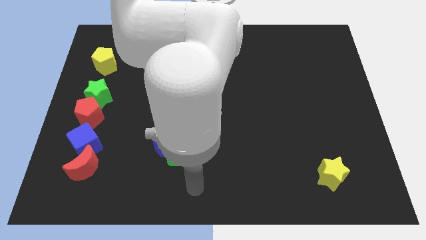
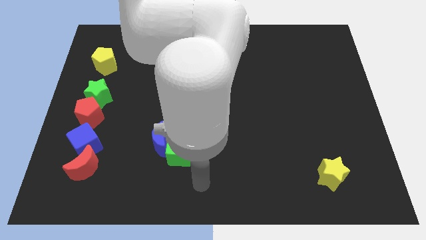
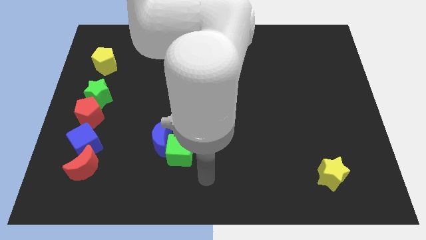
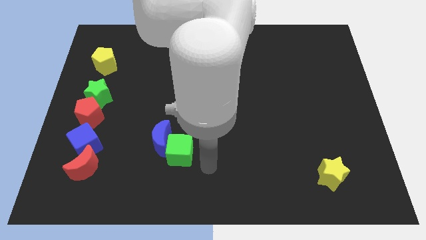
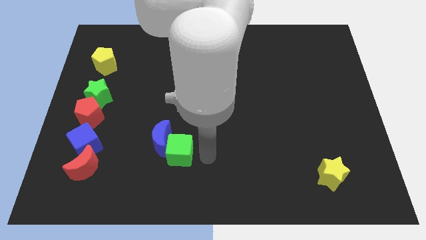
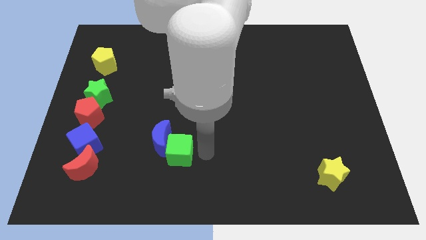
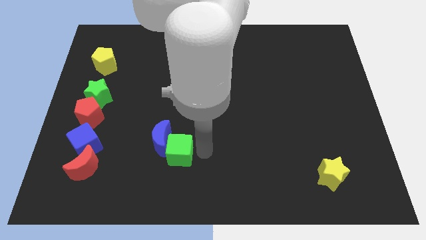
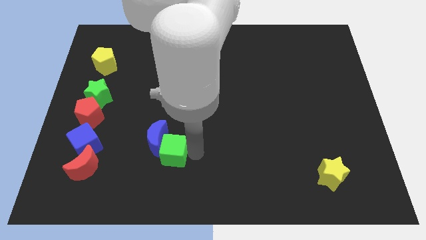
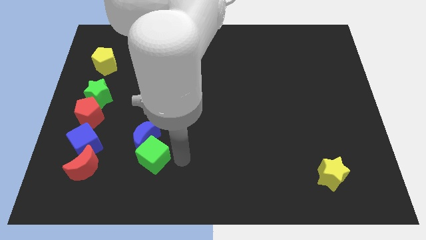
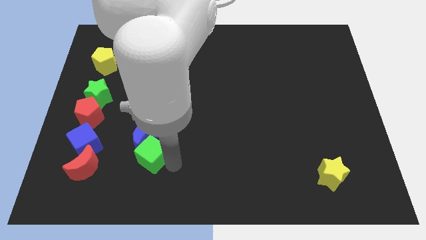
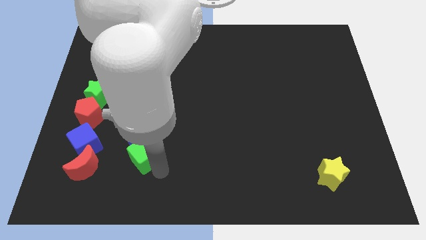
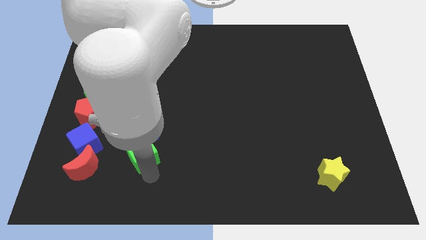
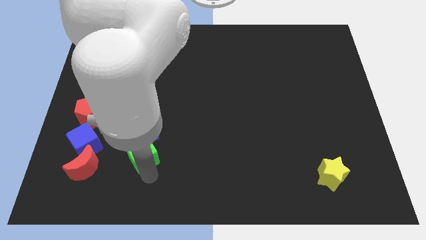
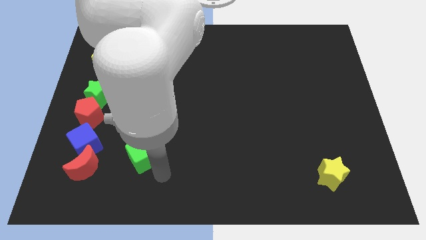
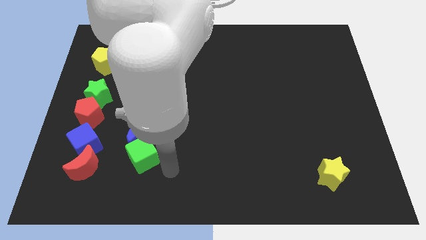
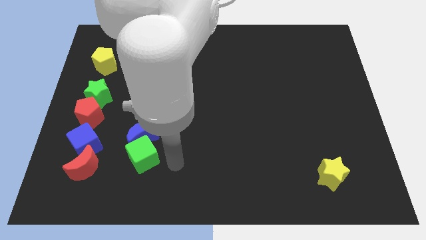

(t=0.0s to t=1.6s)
push the green cube into the blue moon

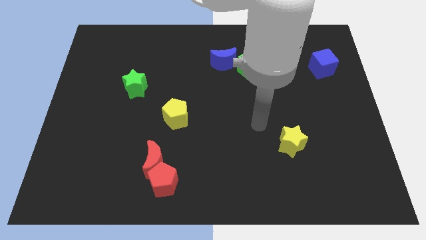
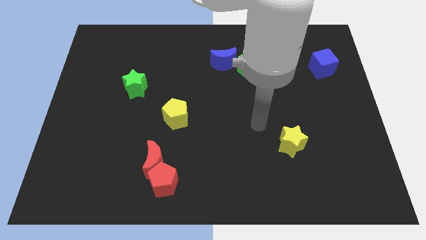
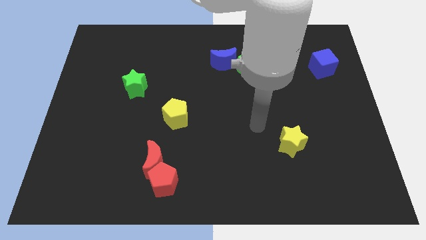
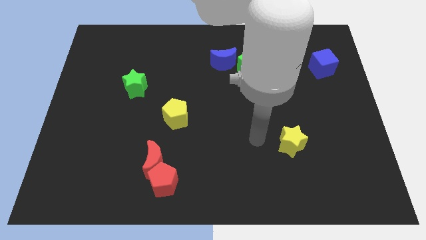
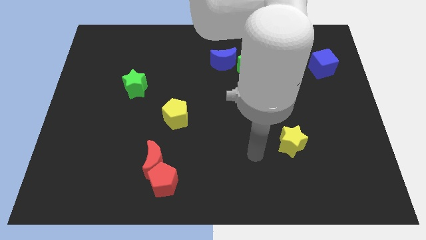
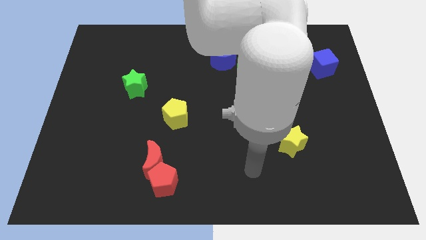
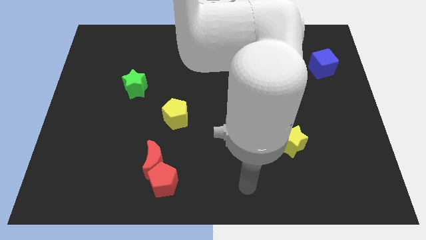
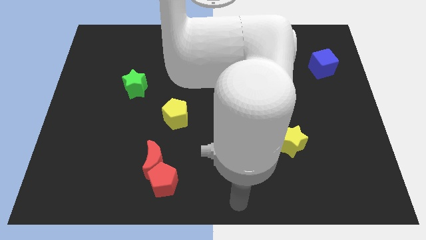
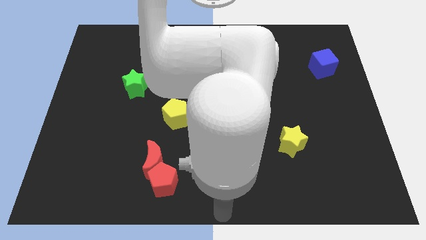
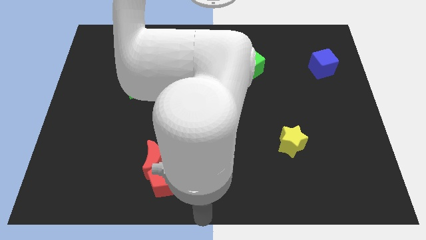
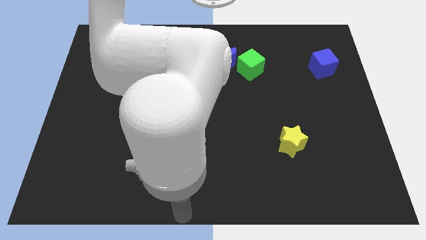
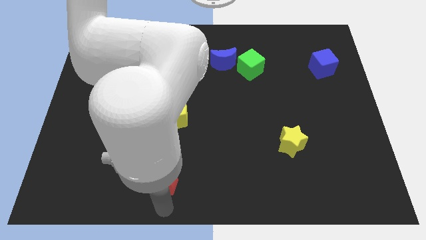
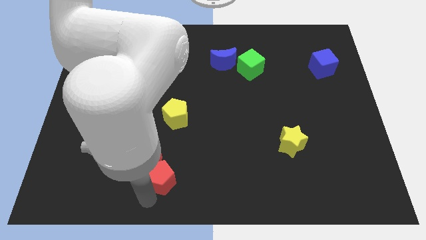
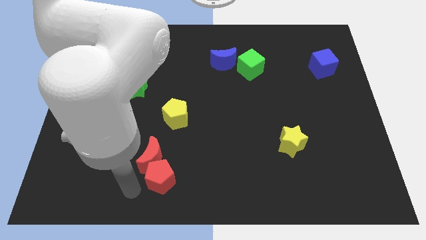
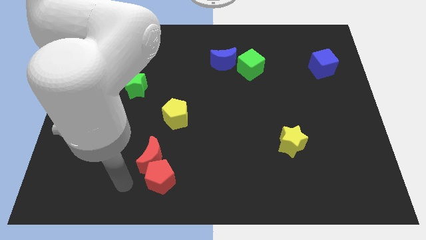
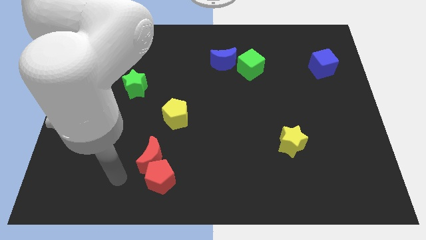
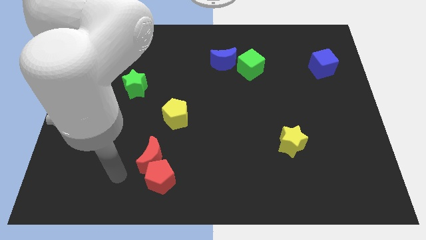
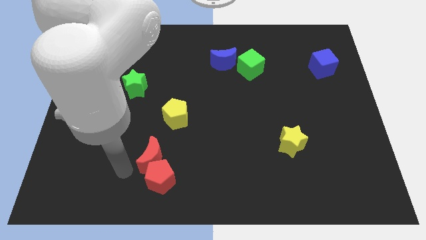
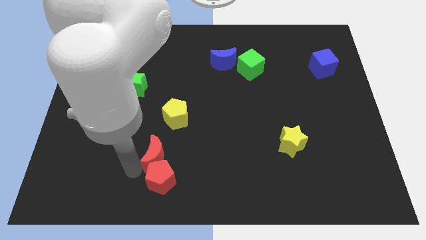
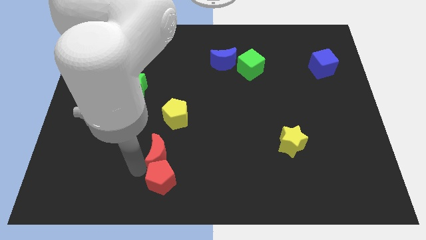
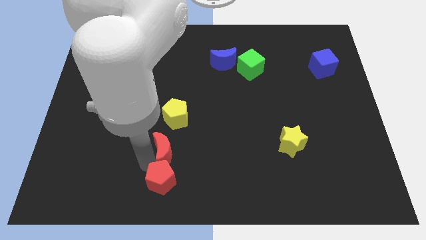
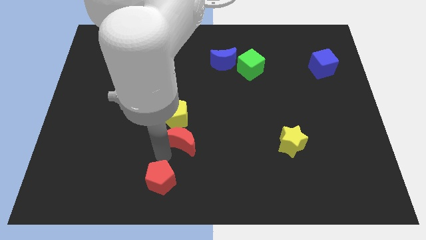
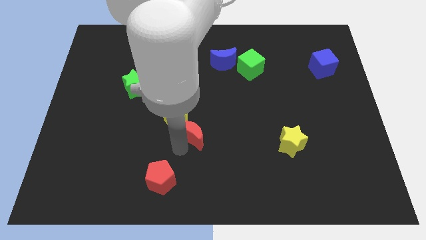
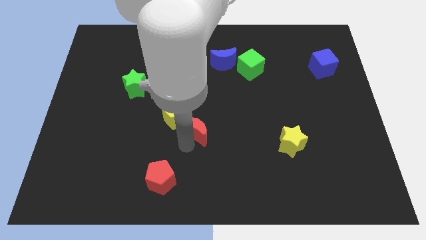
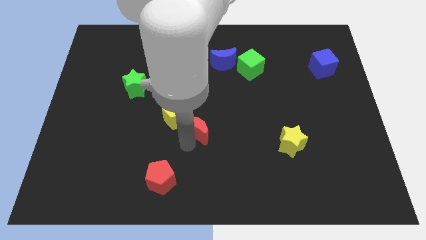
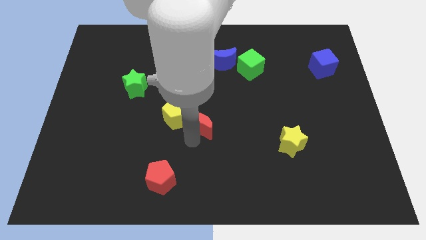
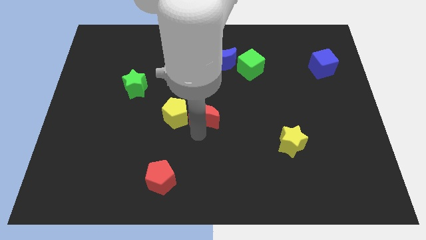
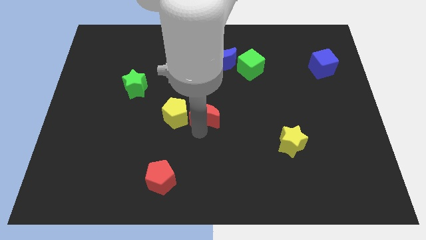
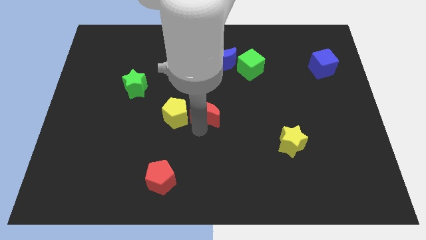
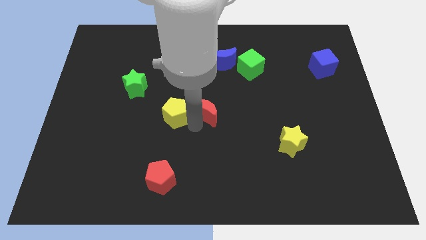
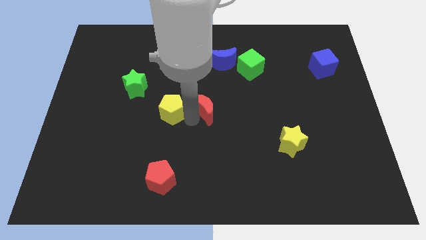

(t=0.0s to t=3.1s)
move red crescent to the centre of the board

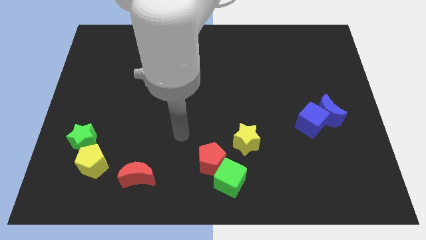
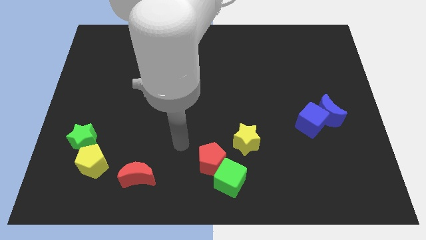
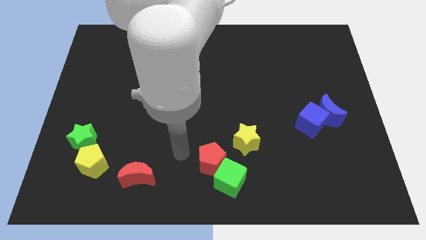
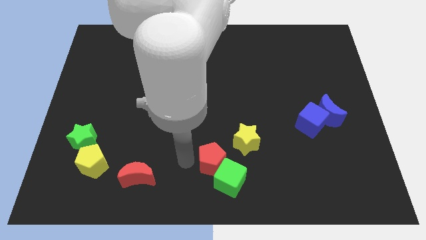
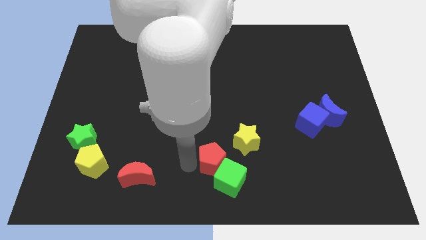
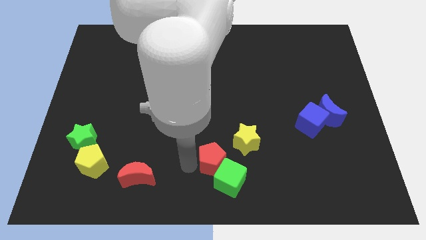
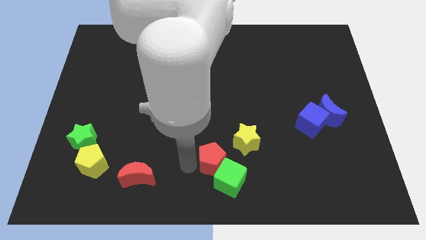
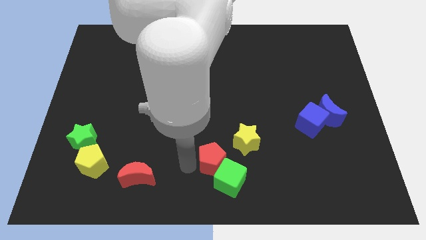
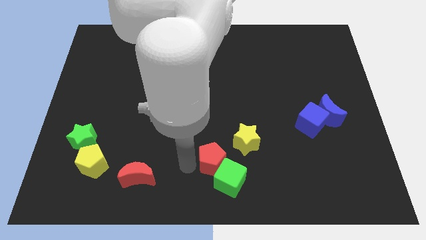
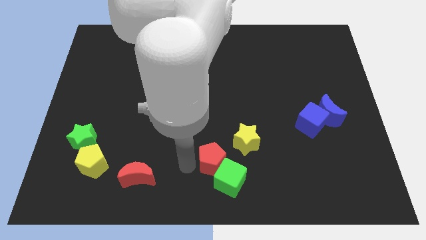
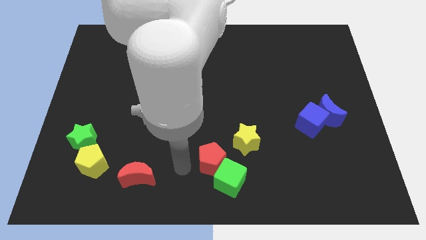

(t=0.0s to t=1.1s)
place arm in between red blocks

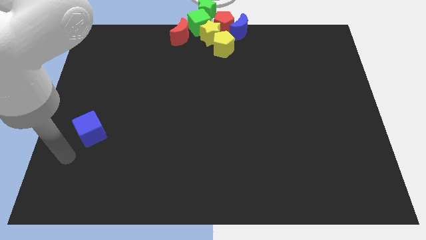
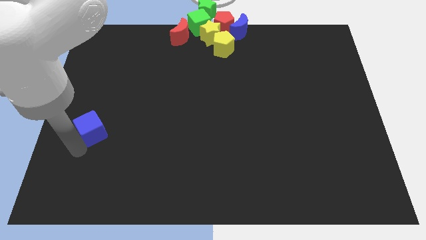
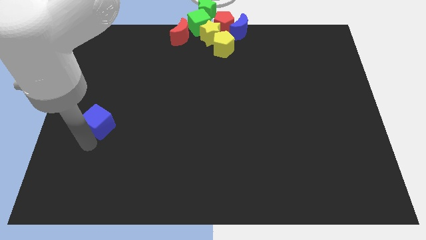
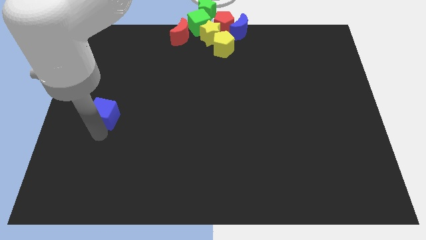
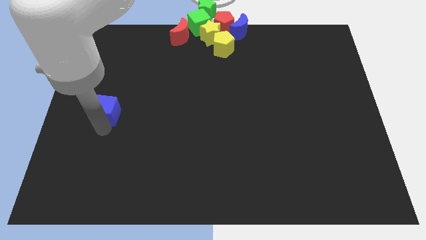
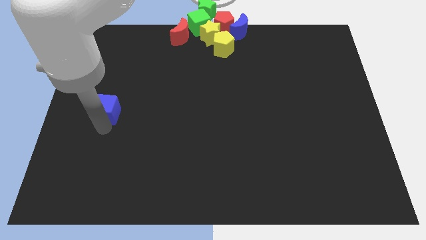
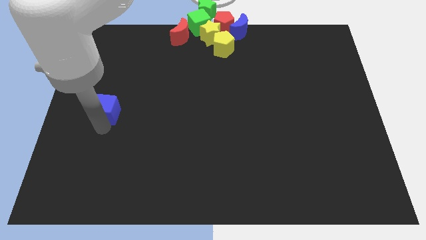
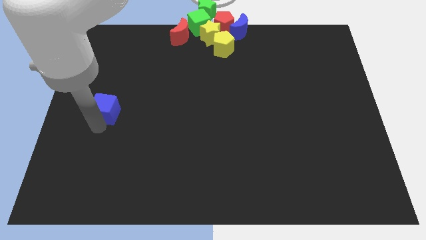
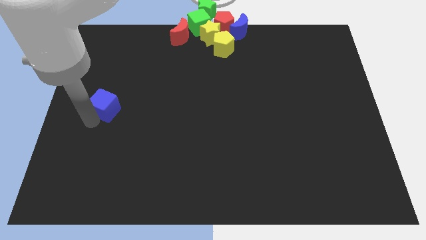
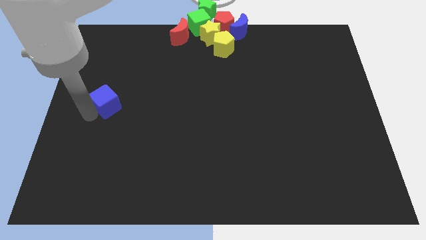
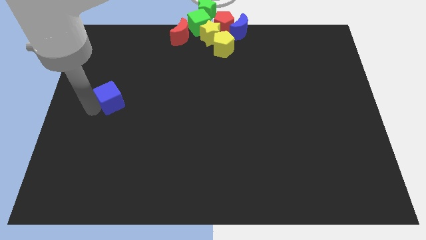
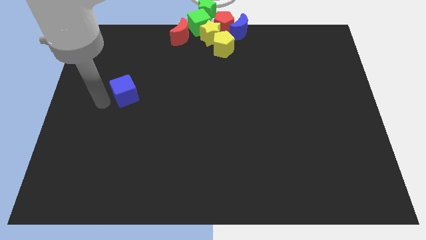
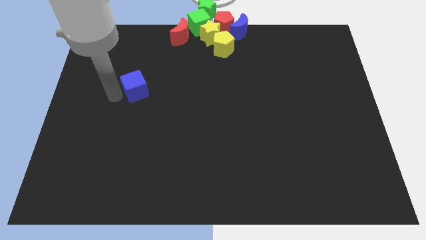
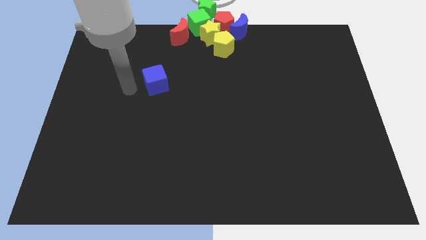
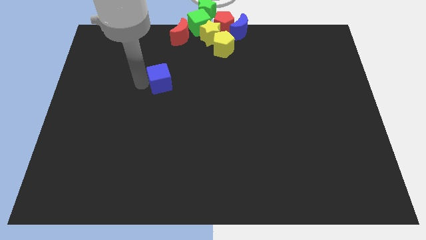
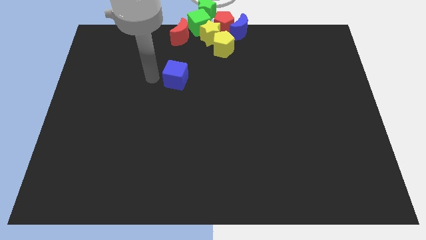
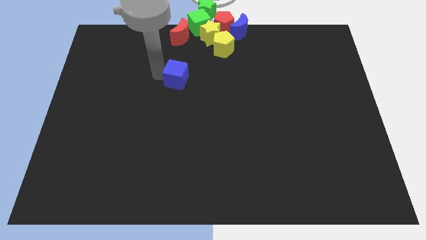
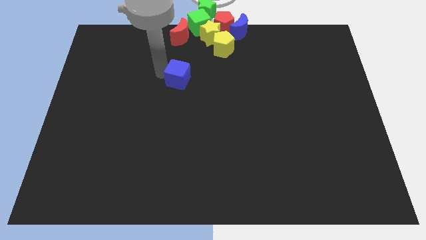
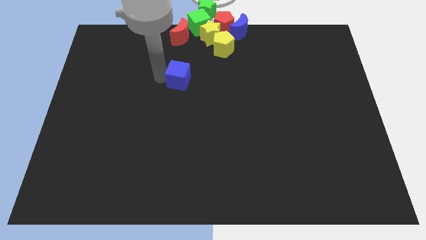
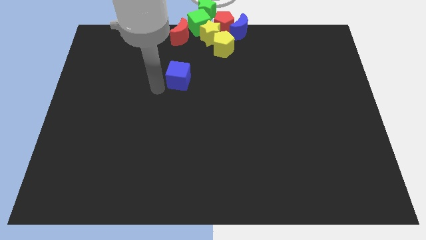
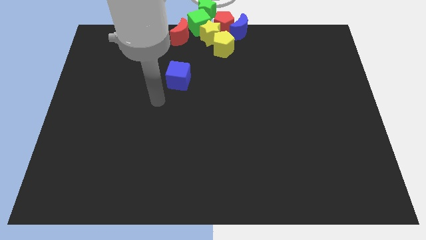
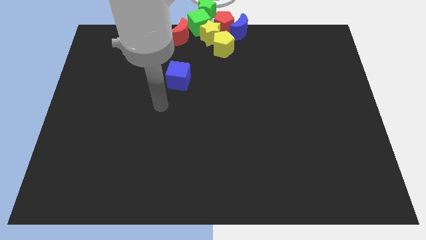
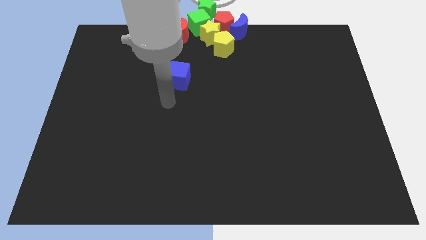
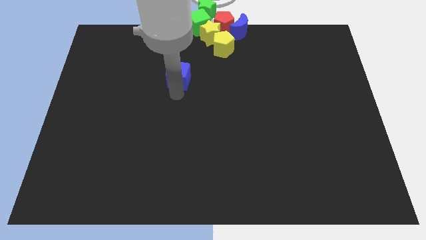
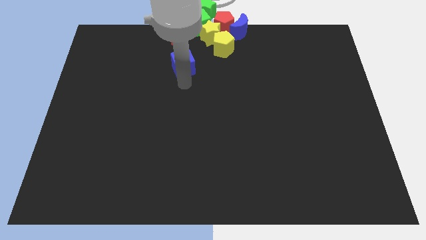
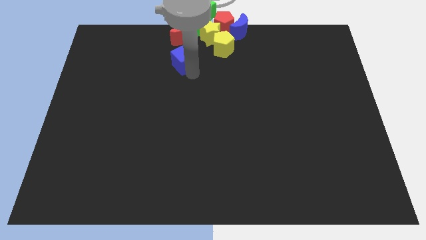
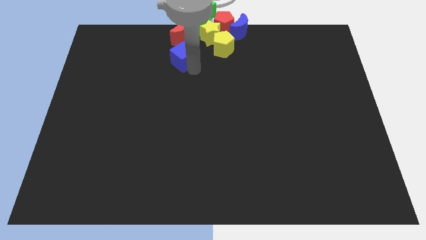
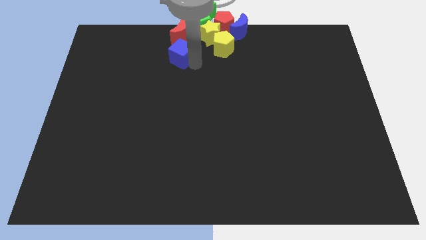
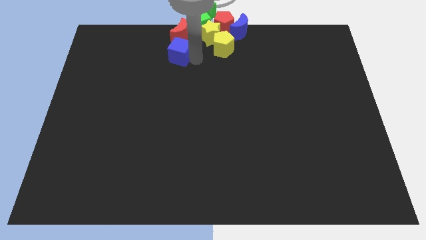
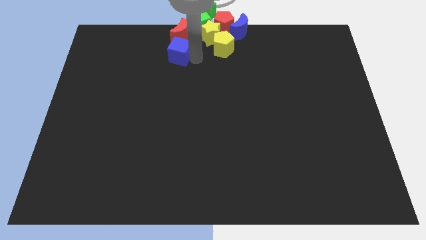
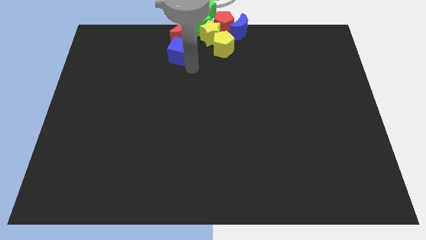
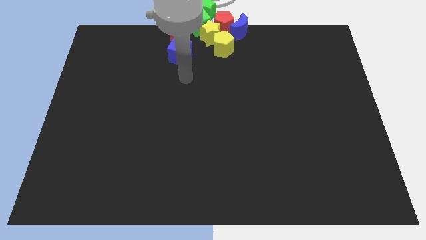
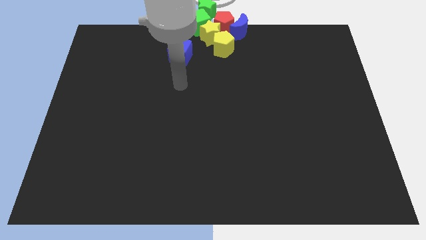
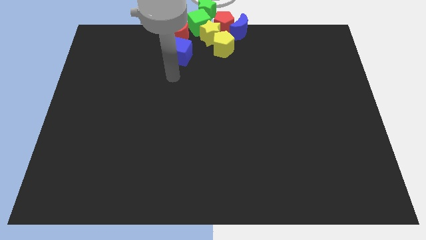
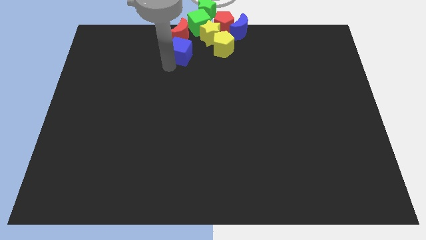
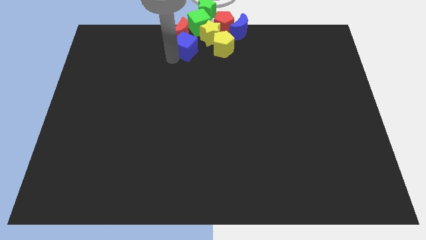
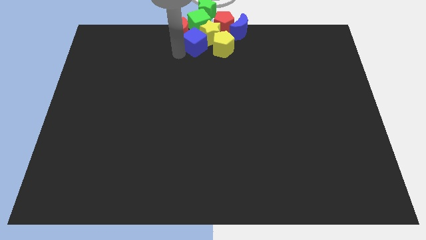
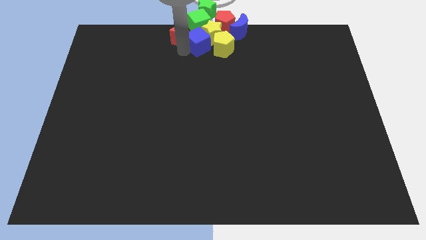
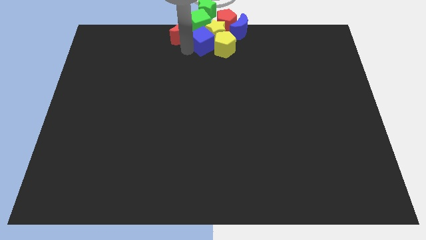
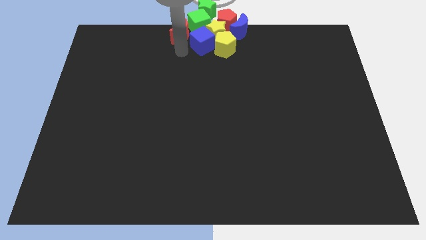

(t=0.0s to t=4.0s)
move the blue cube to the group of blocks
